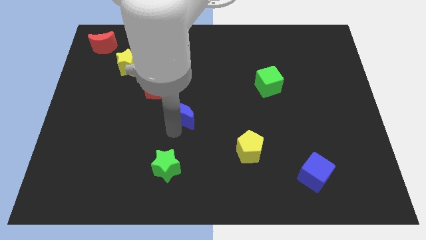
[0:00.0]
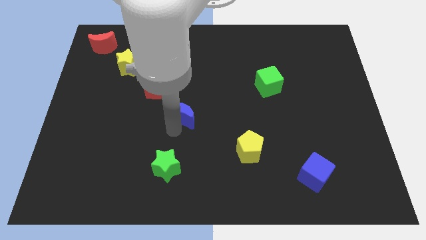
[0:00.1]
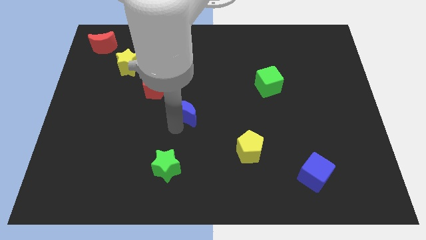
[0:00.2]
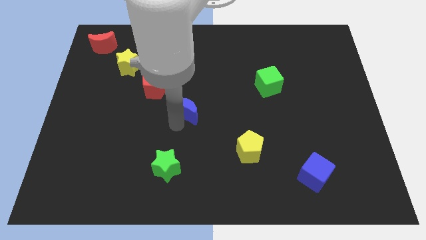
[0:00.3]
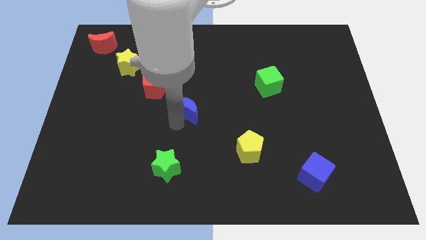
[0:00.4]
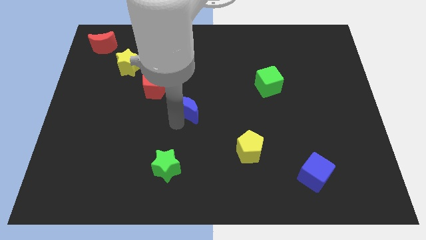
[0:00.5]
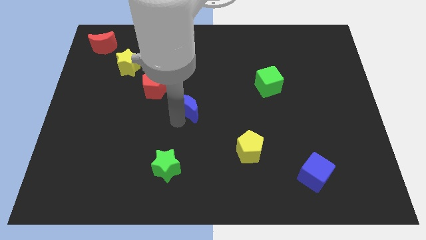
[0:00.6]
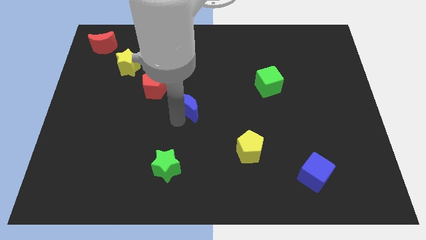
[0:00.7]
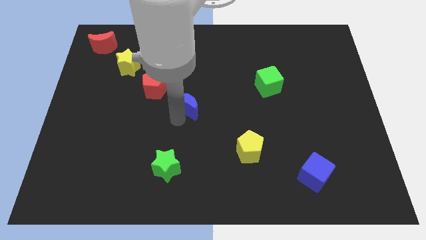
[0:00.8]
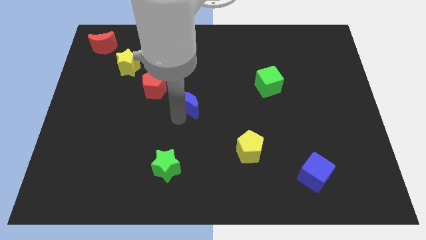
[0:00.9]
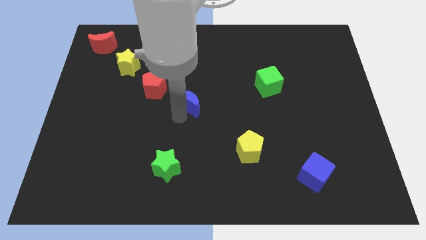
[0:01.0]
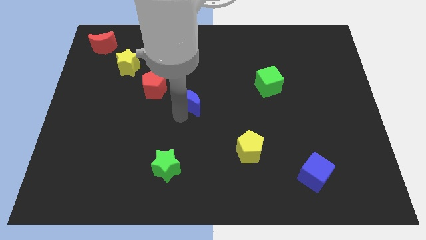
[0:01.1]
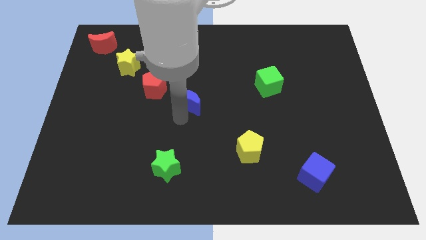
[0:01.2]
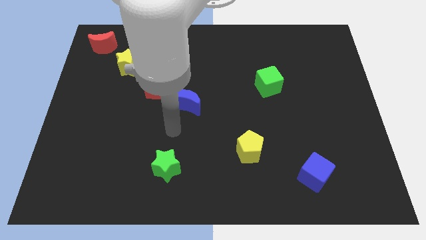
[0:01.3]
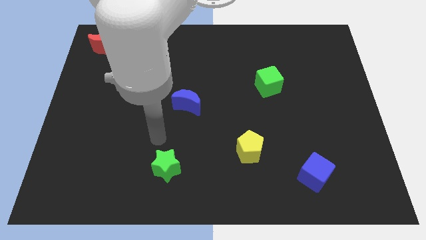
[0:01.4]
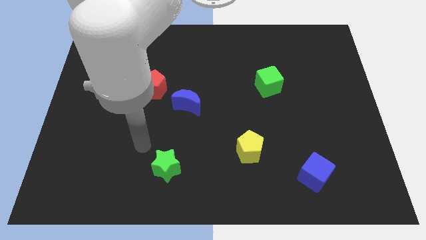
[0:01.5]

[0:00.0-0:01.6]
place blue crescent to the bottom right of red pentagon

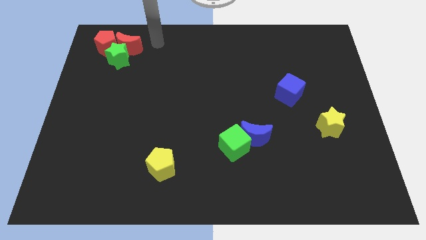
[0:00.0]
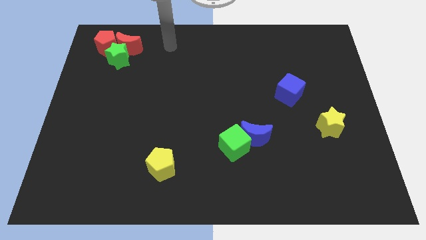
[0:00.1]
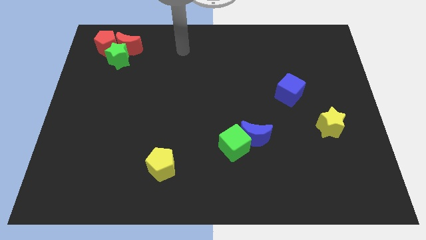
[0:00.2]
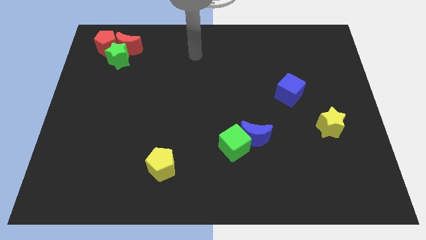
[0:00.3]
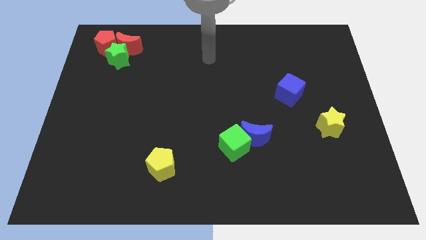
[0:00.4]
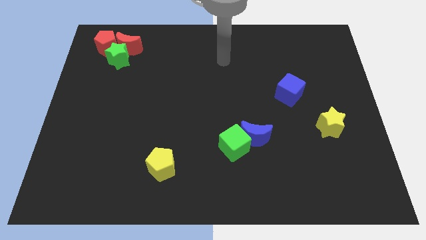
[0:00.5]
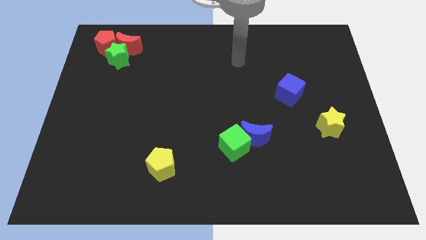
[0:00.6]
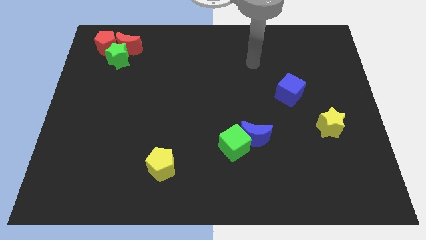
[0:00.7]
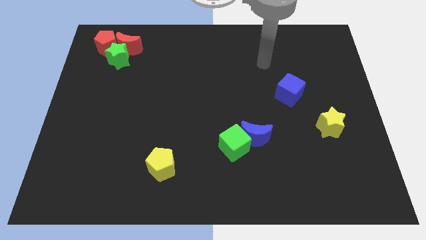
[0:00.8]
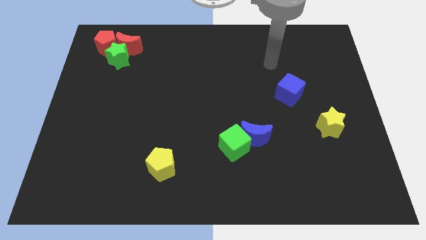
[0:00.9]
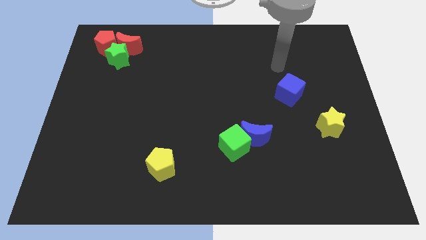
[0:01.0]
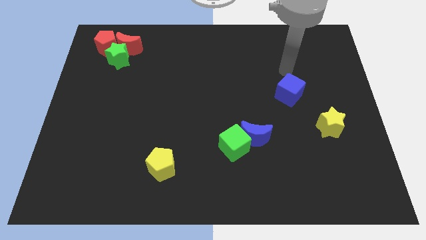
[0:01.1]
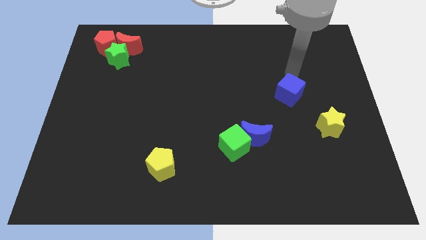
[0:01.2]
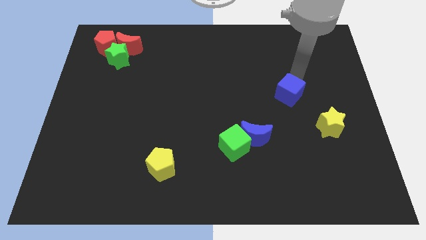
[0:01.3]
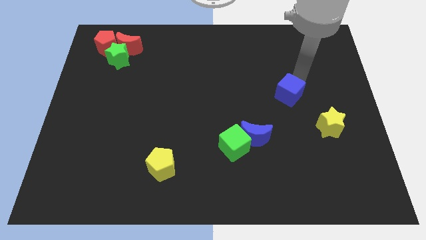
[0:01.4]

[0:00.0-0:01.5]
move your arm to the top of the blue cube

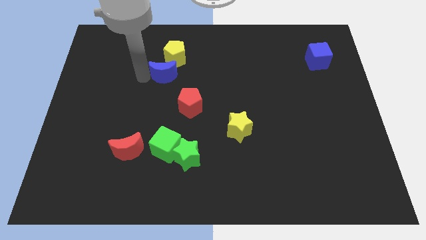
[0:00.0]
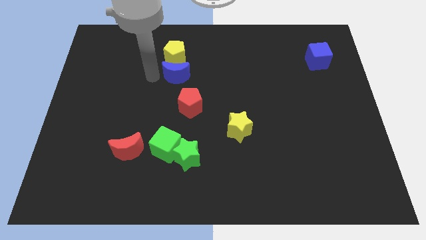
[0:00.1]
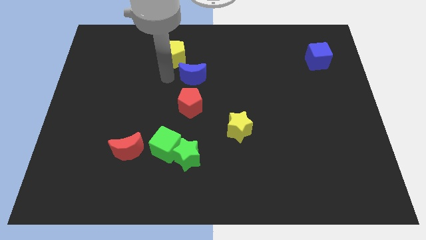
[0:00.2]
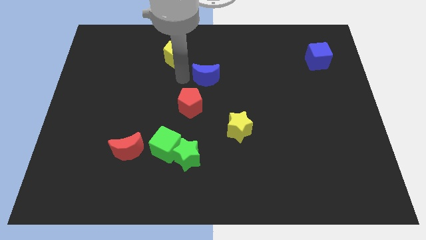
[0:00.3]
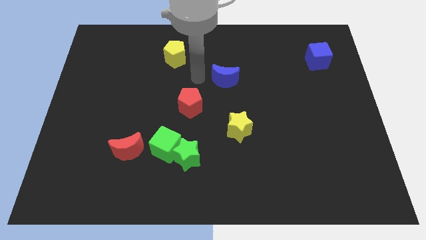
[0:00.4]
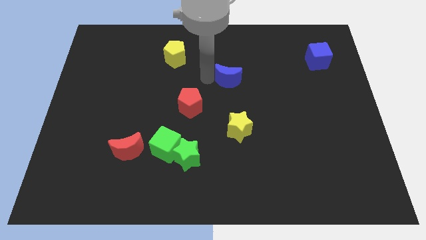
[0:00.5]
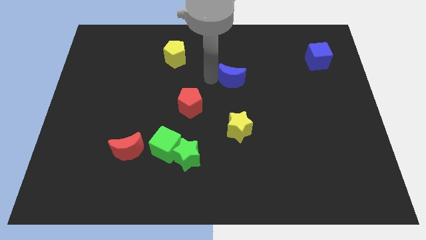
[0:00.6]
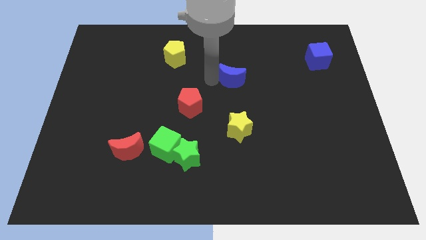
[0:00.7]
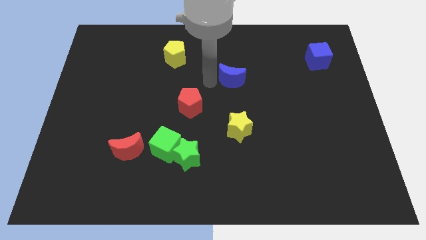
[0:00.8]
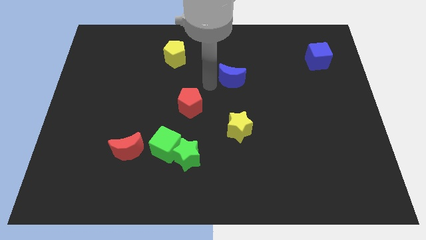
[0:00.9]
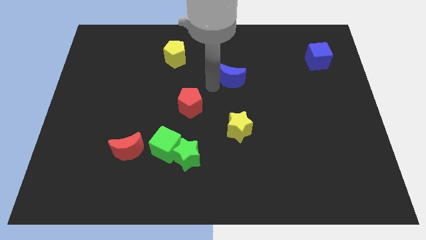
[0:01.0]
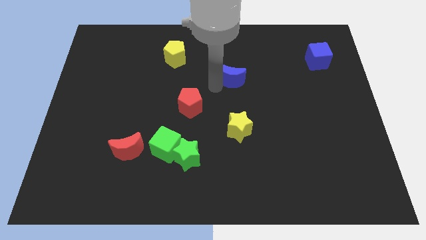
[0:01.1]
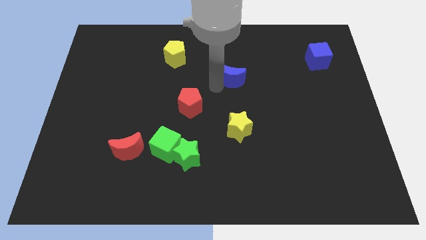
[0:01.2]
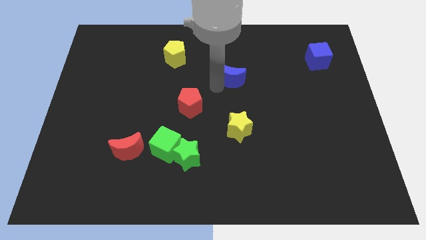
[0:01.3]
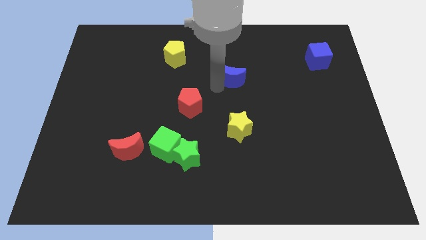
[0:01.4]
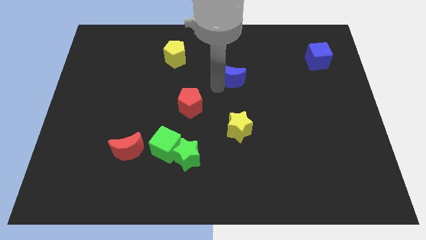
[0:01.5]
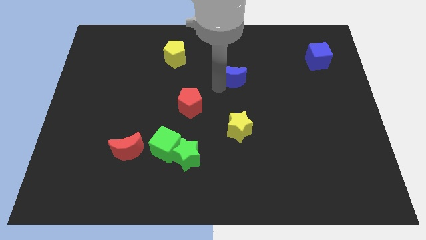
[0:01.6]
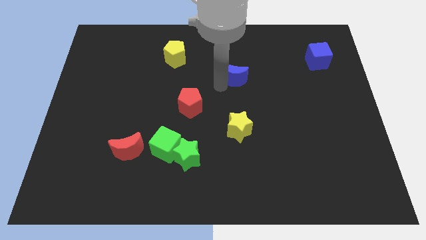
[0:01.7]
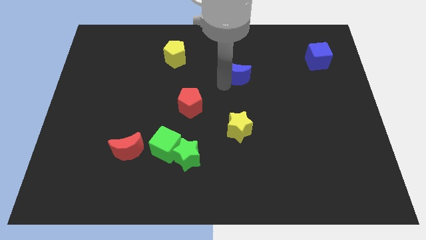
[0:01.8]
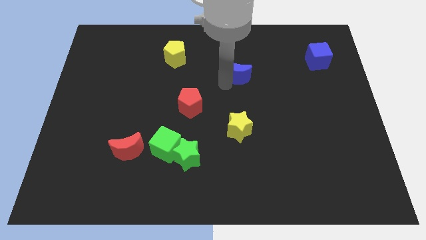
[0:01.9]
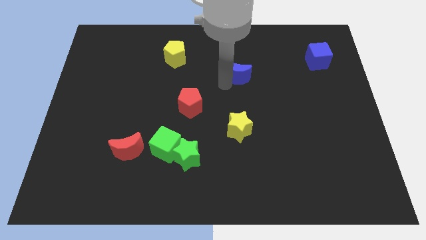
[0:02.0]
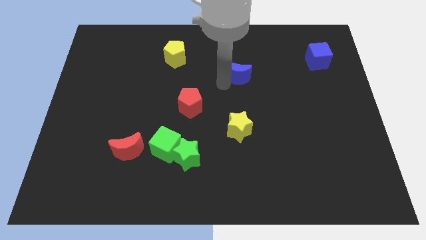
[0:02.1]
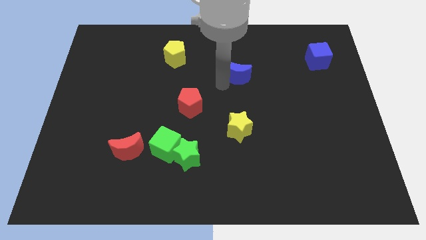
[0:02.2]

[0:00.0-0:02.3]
move the blue crescent to the top of the yellow star

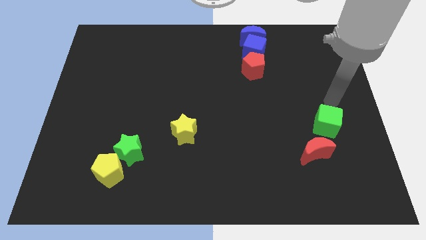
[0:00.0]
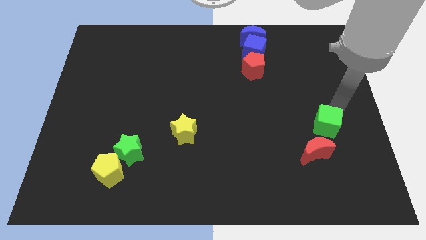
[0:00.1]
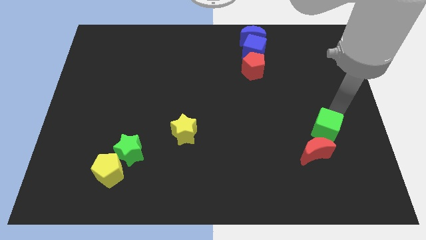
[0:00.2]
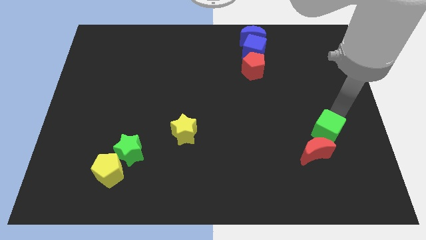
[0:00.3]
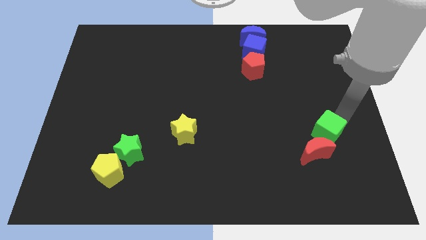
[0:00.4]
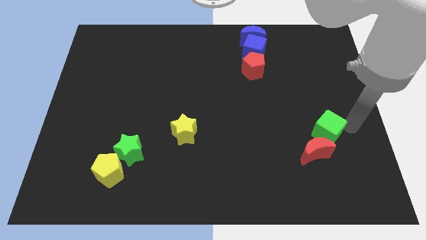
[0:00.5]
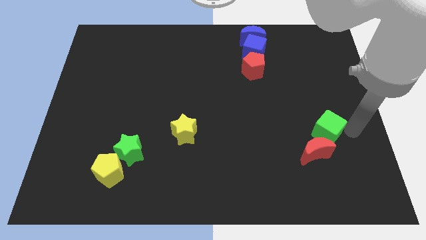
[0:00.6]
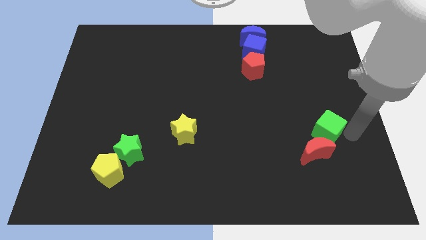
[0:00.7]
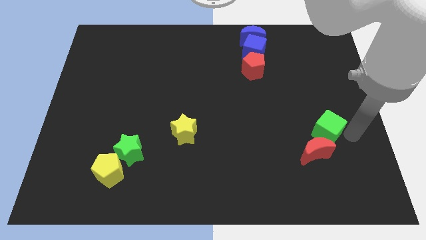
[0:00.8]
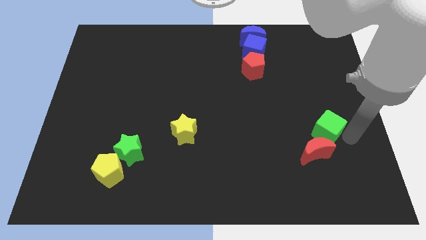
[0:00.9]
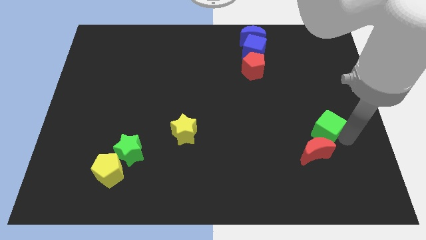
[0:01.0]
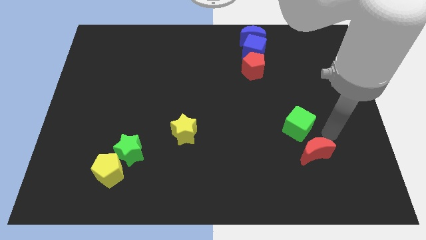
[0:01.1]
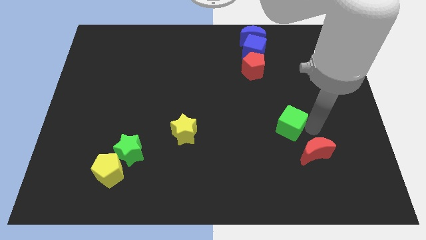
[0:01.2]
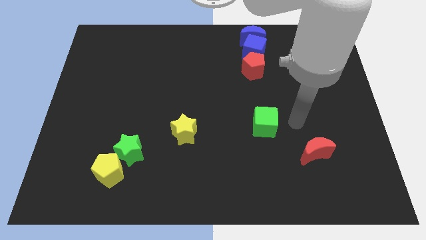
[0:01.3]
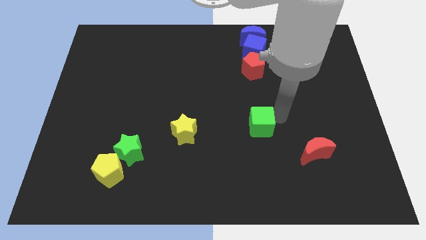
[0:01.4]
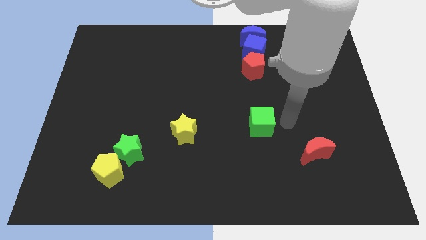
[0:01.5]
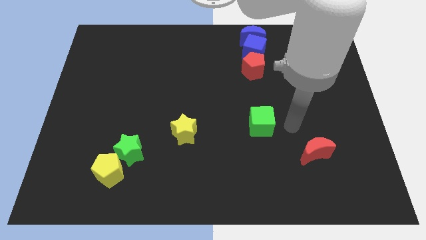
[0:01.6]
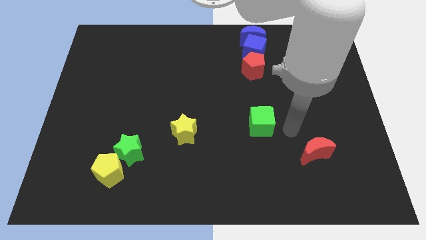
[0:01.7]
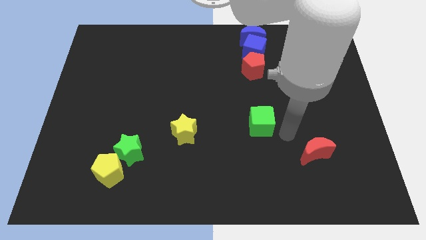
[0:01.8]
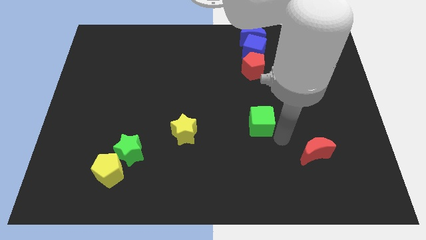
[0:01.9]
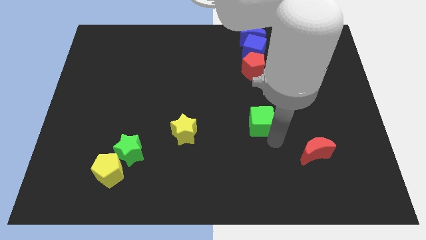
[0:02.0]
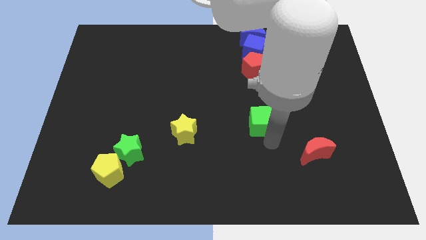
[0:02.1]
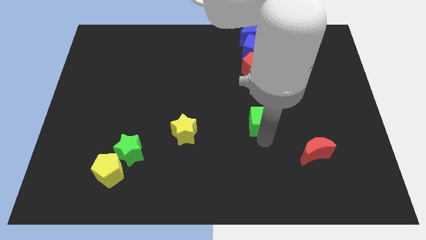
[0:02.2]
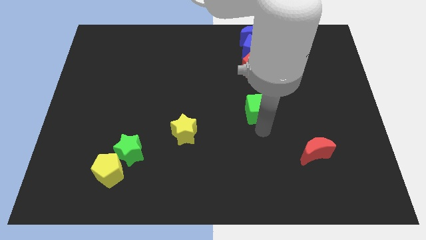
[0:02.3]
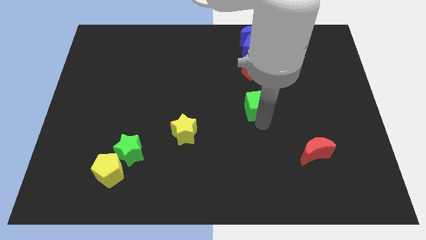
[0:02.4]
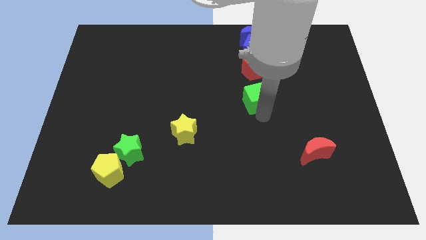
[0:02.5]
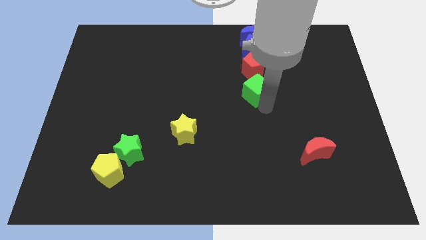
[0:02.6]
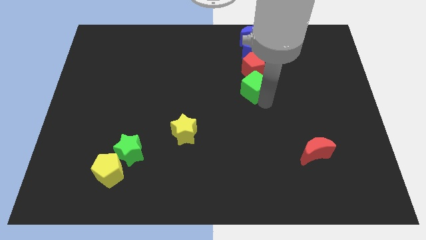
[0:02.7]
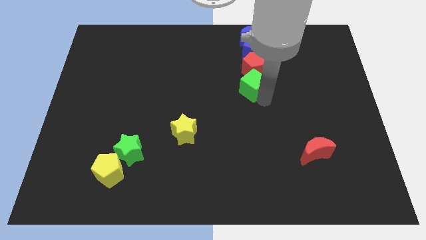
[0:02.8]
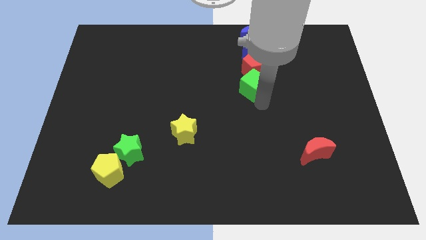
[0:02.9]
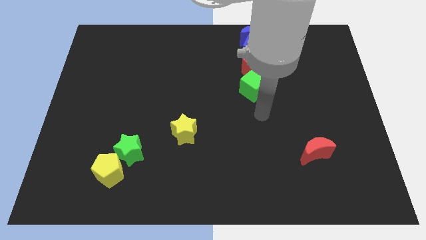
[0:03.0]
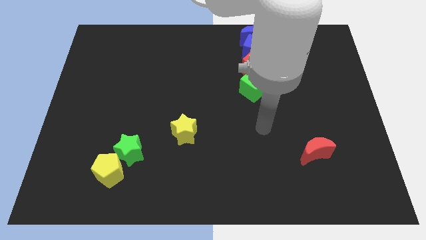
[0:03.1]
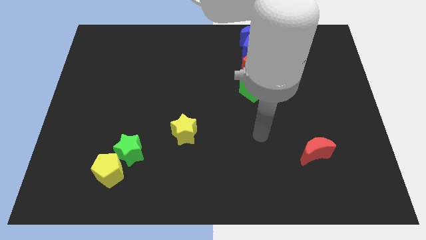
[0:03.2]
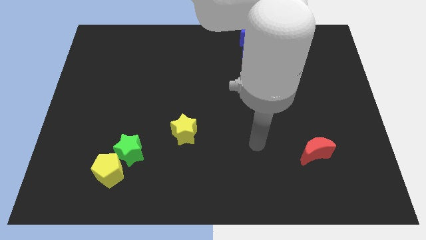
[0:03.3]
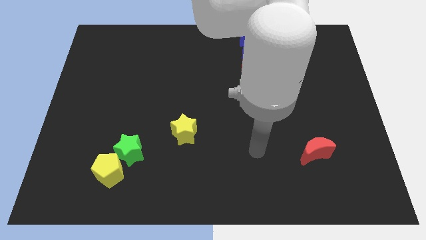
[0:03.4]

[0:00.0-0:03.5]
place the green cube into the red pentagon
